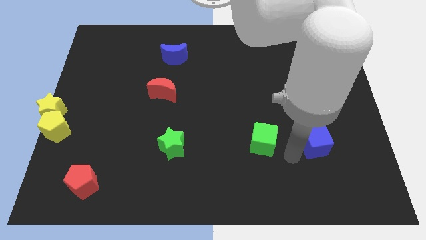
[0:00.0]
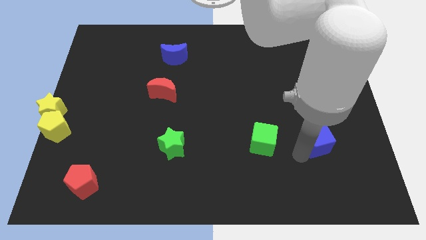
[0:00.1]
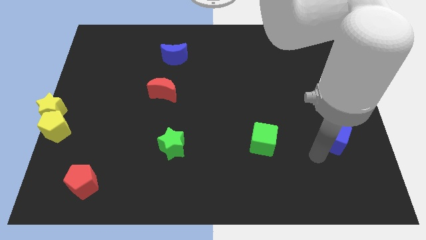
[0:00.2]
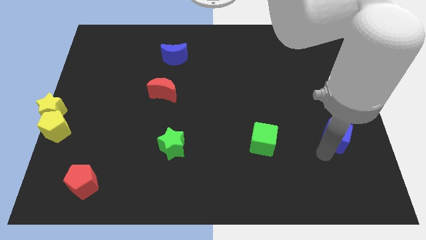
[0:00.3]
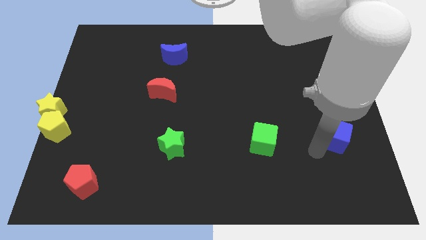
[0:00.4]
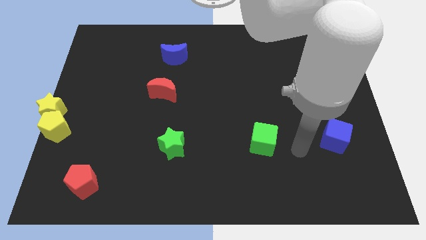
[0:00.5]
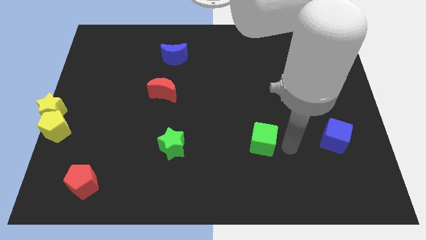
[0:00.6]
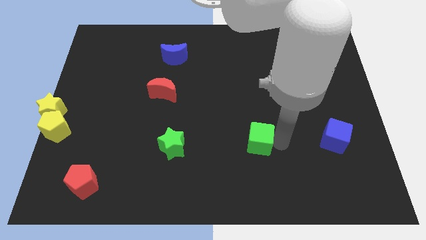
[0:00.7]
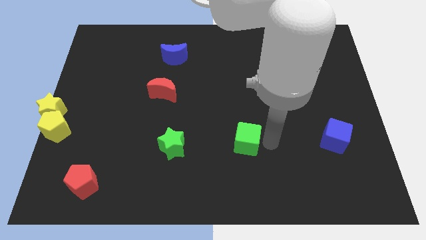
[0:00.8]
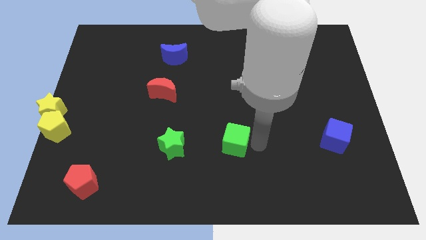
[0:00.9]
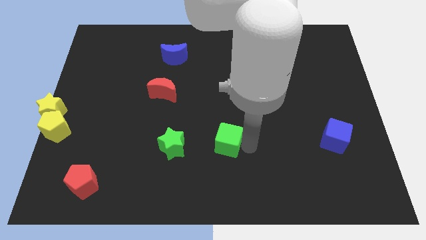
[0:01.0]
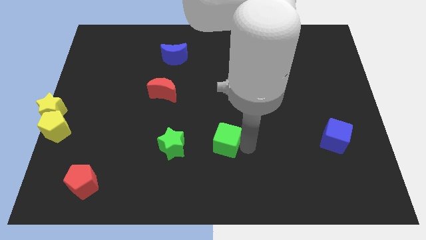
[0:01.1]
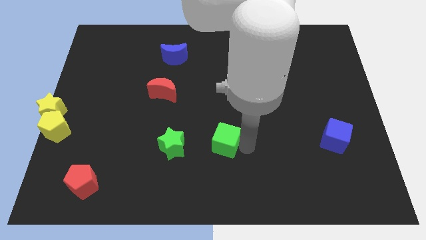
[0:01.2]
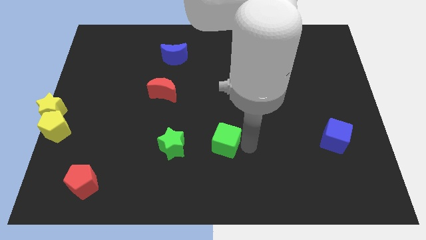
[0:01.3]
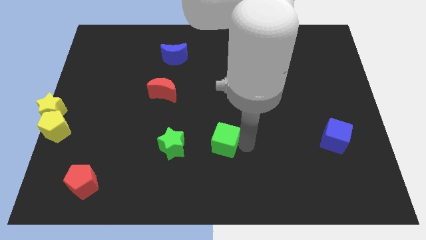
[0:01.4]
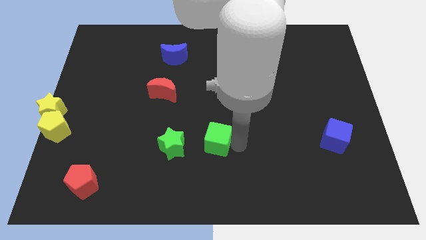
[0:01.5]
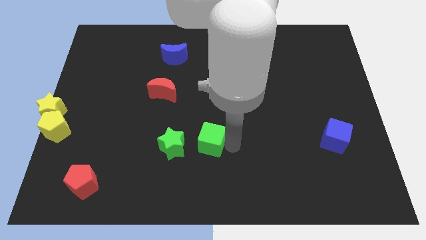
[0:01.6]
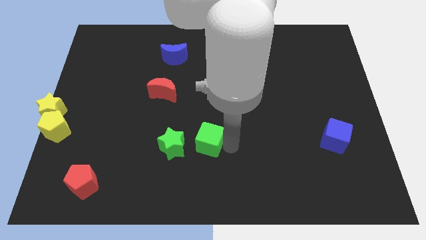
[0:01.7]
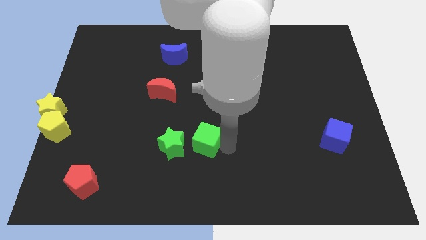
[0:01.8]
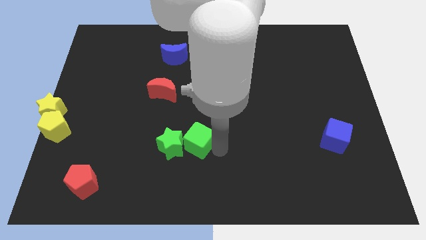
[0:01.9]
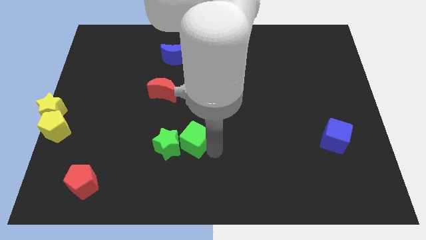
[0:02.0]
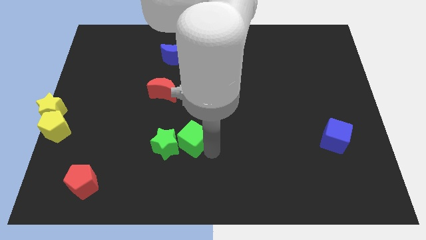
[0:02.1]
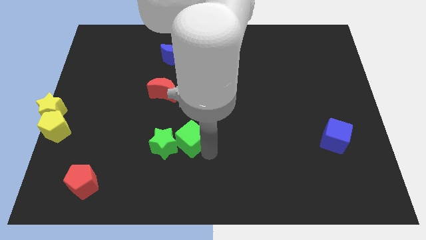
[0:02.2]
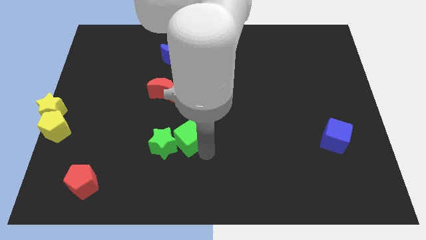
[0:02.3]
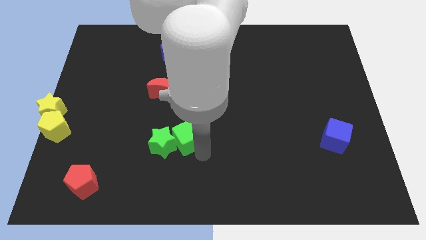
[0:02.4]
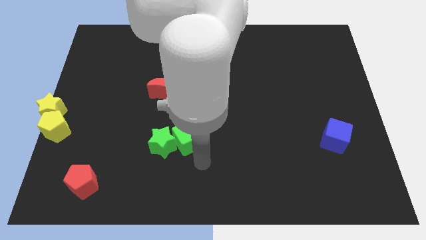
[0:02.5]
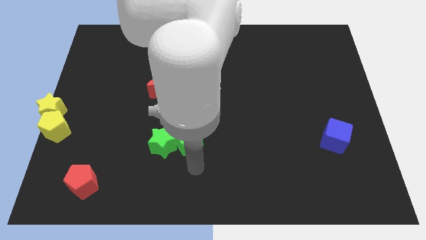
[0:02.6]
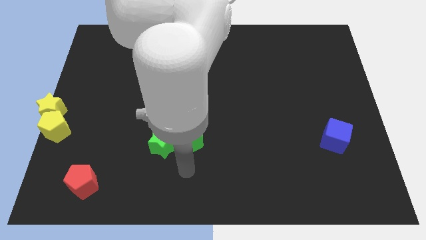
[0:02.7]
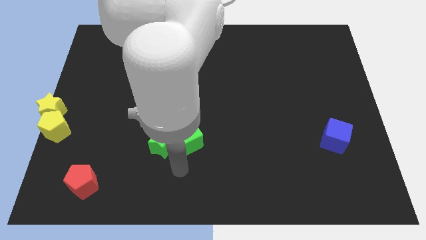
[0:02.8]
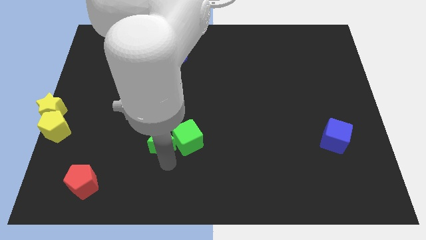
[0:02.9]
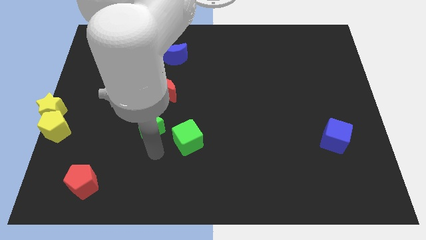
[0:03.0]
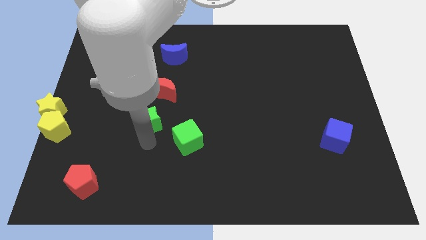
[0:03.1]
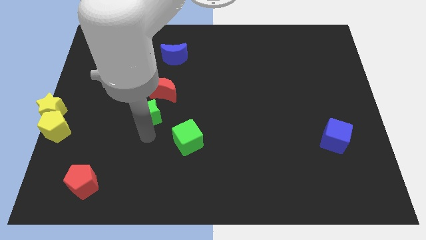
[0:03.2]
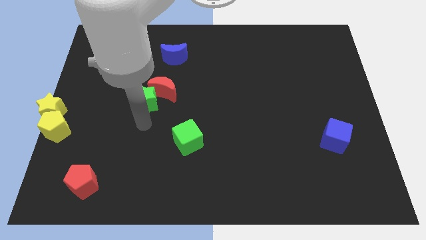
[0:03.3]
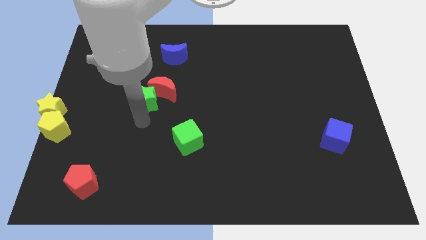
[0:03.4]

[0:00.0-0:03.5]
drag green star near to red crescent

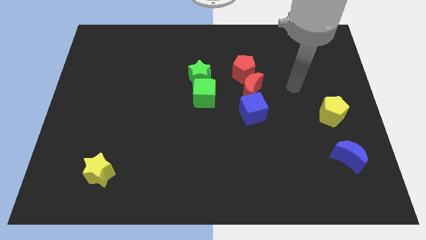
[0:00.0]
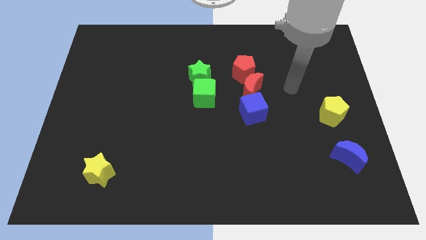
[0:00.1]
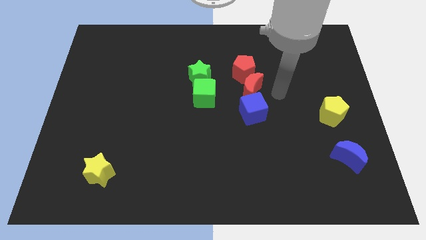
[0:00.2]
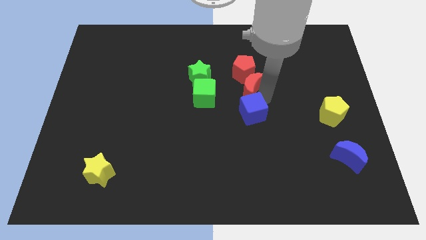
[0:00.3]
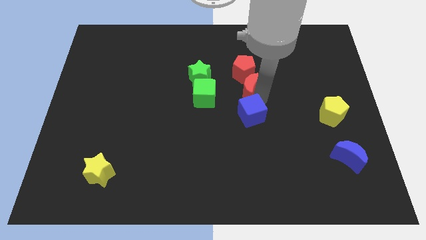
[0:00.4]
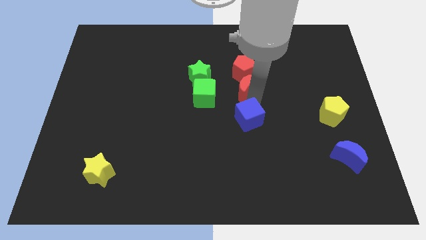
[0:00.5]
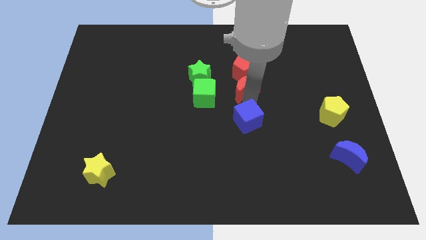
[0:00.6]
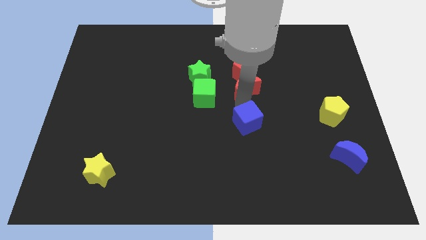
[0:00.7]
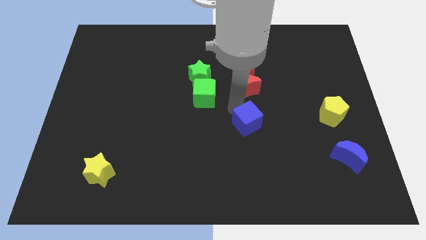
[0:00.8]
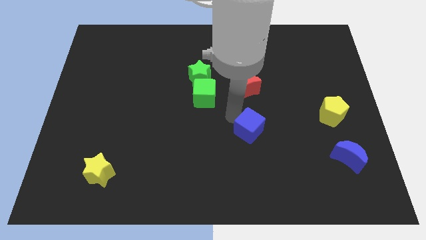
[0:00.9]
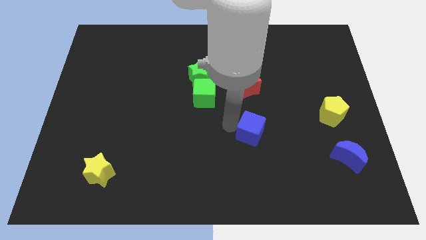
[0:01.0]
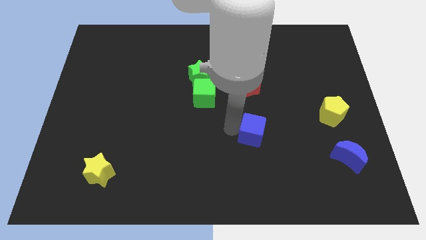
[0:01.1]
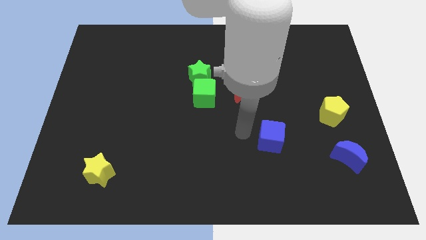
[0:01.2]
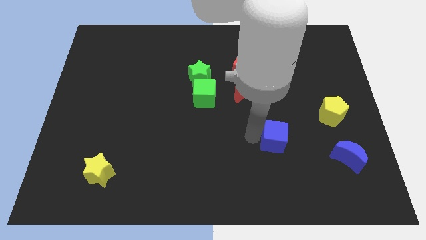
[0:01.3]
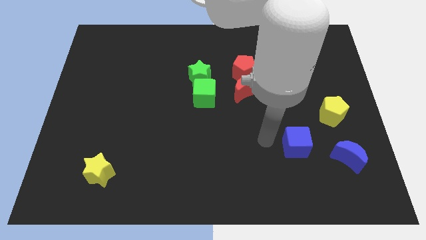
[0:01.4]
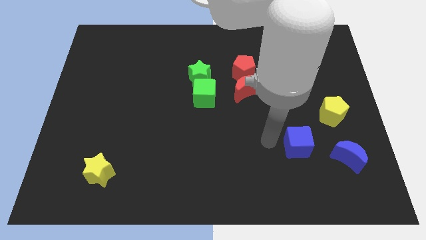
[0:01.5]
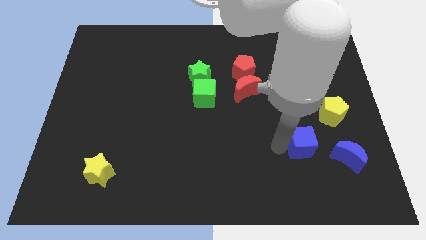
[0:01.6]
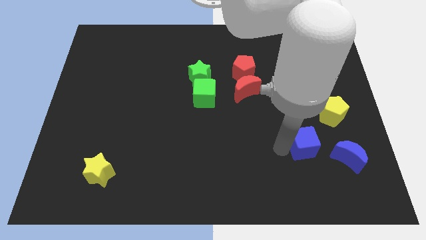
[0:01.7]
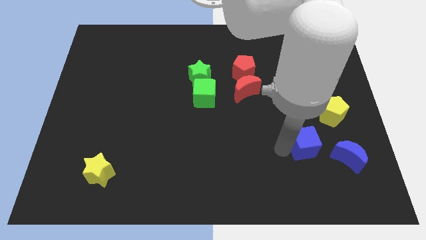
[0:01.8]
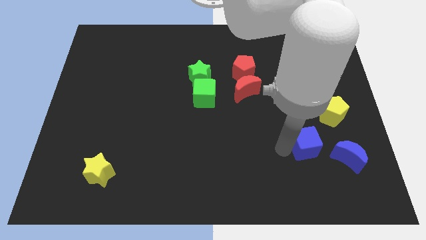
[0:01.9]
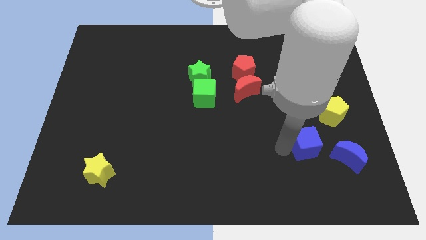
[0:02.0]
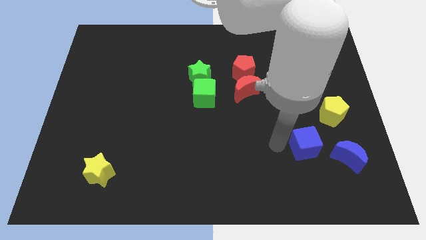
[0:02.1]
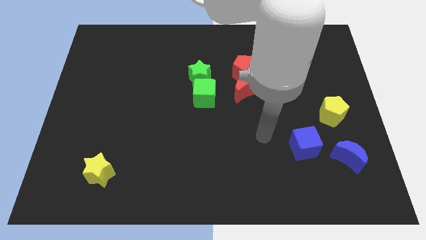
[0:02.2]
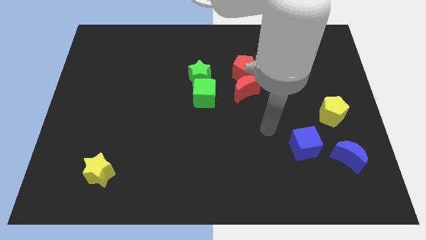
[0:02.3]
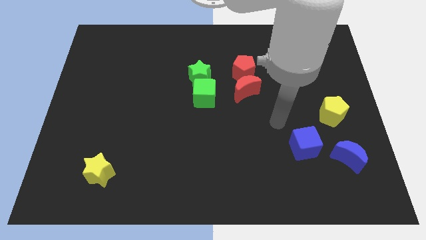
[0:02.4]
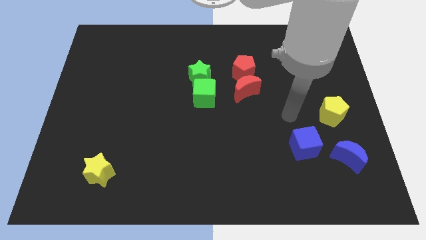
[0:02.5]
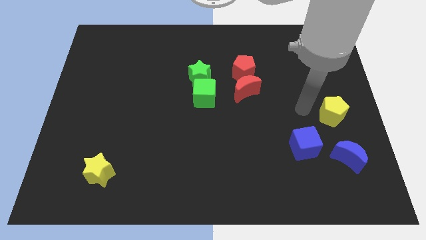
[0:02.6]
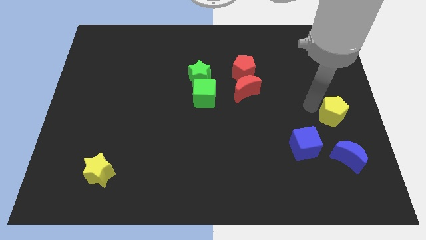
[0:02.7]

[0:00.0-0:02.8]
move blue cube towards blue moon

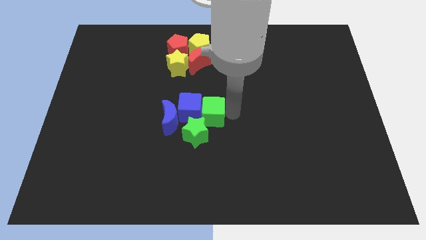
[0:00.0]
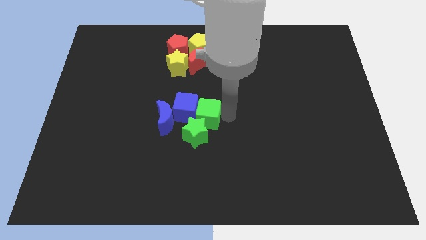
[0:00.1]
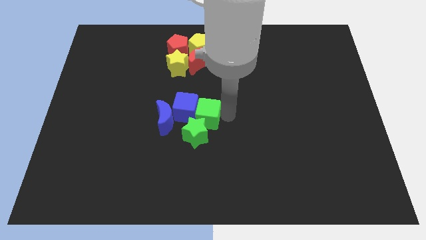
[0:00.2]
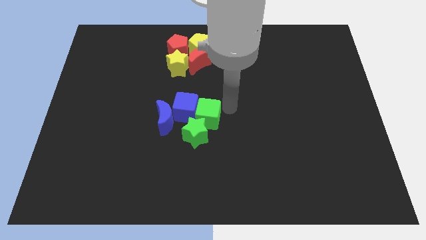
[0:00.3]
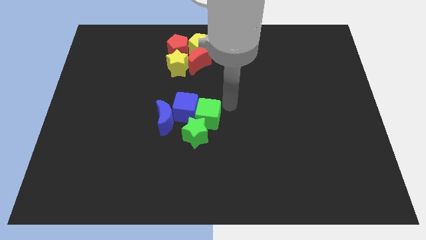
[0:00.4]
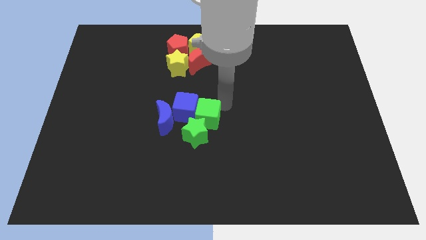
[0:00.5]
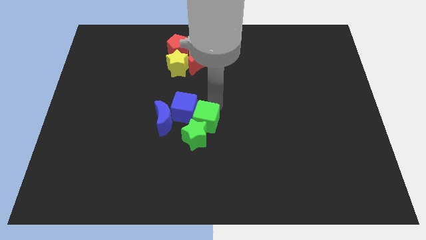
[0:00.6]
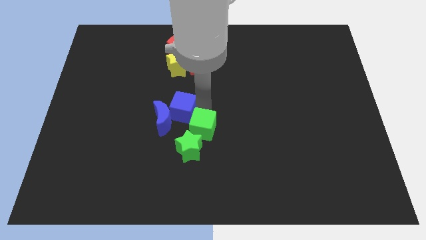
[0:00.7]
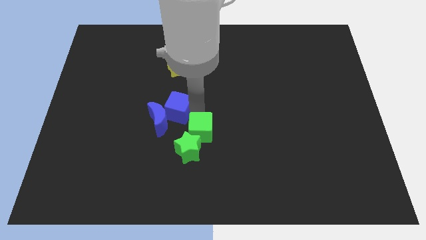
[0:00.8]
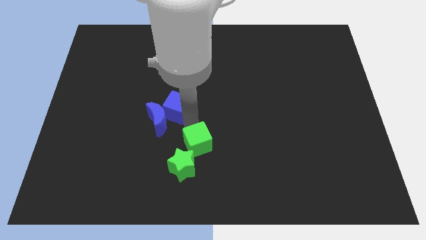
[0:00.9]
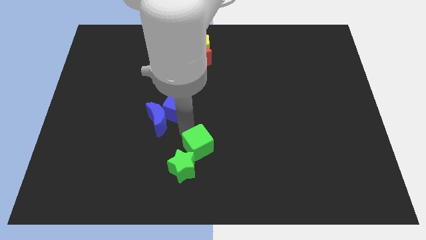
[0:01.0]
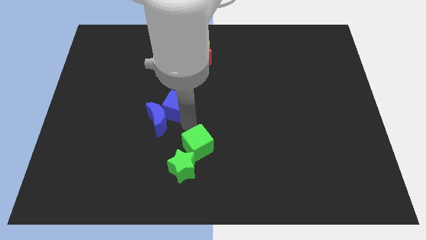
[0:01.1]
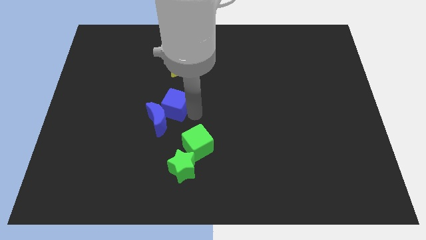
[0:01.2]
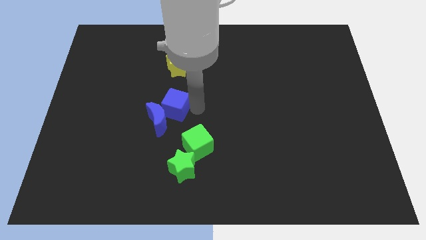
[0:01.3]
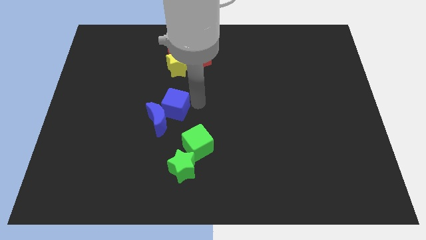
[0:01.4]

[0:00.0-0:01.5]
separate the green cube and the blue cube

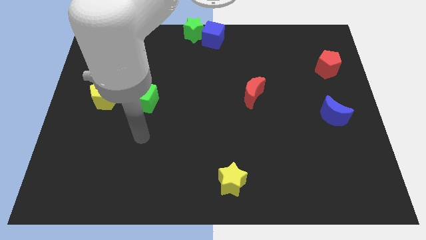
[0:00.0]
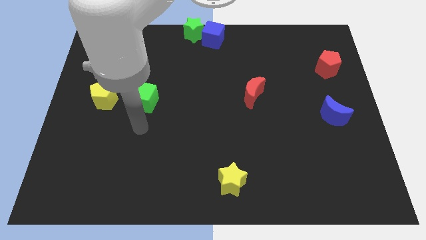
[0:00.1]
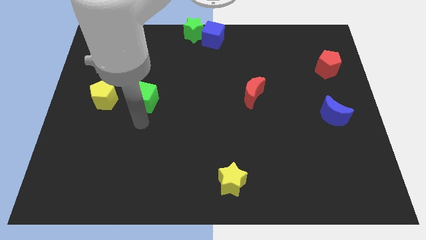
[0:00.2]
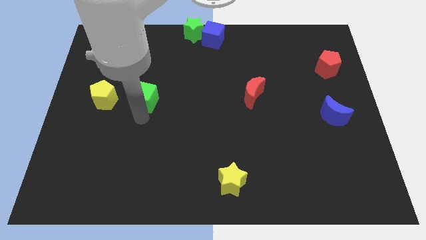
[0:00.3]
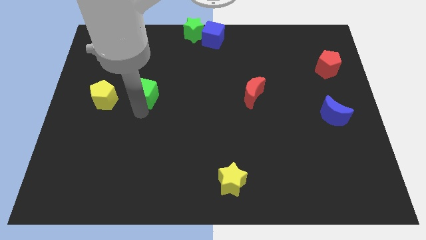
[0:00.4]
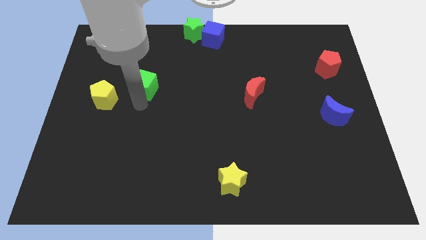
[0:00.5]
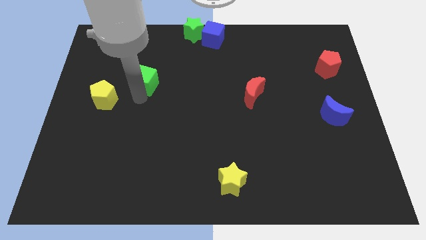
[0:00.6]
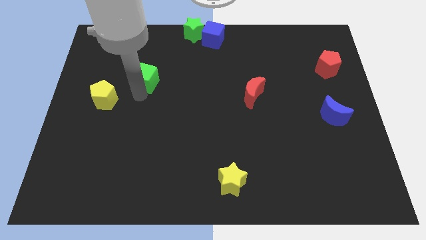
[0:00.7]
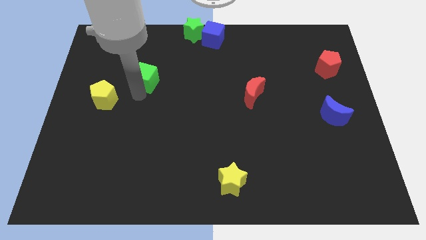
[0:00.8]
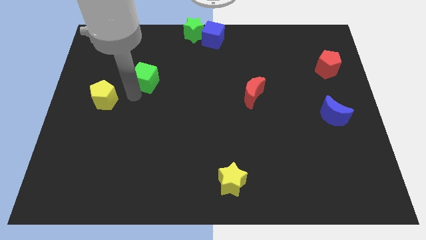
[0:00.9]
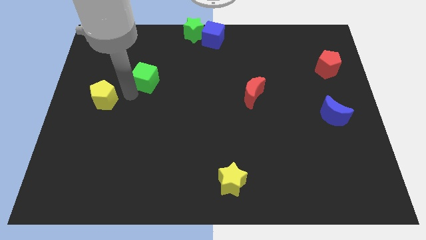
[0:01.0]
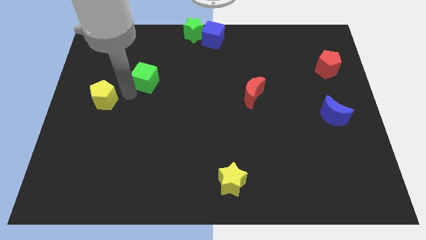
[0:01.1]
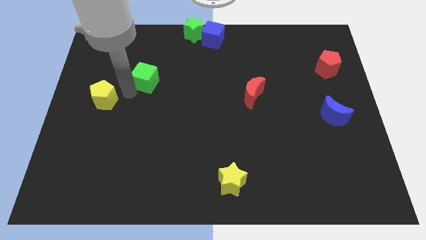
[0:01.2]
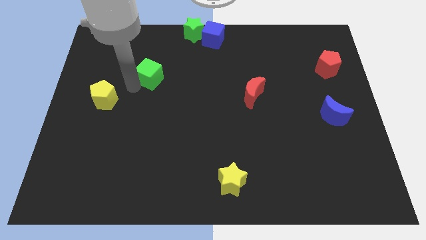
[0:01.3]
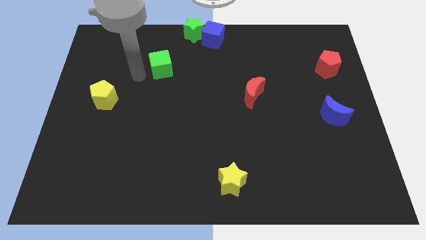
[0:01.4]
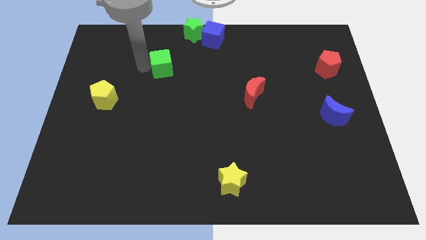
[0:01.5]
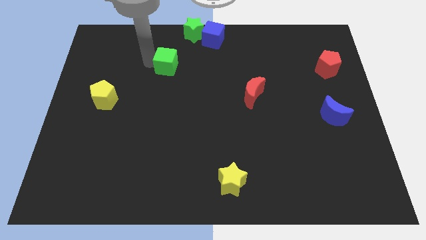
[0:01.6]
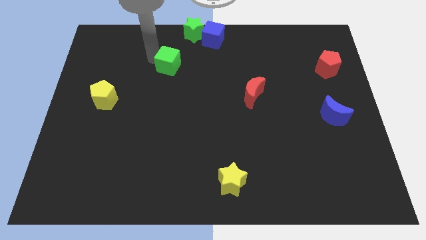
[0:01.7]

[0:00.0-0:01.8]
push the green cube diagonally top right to the yellow pentagon
